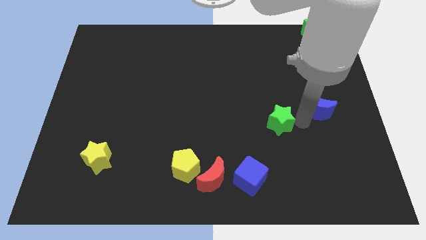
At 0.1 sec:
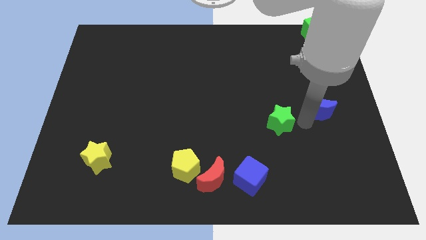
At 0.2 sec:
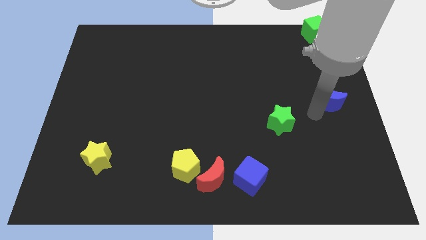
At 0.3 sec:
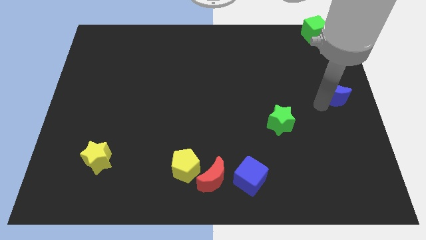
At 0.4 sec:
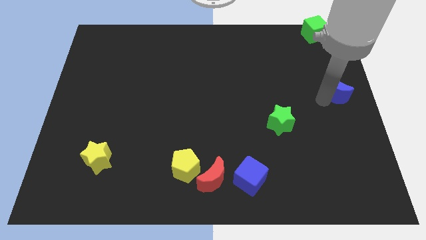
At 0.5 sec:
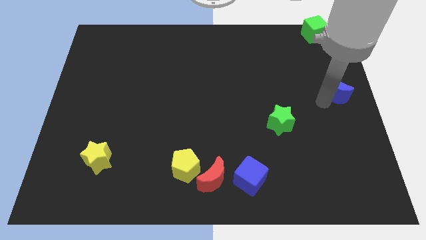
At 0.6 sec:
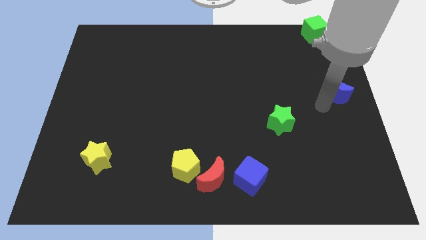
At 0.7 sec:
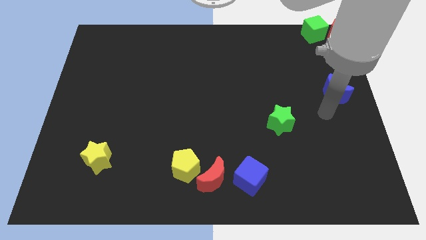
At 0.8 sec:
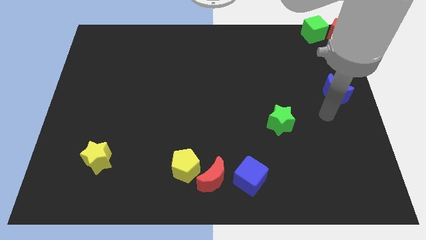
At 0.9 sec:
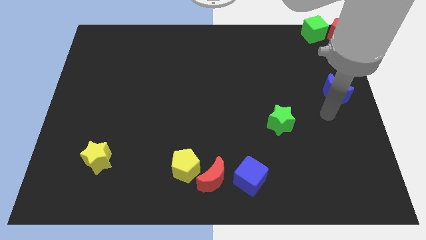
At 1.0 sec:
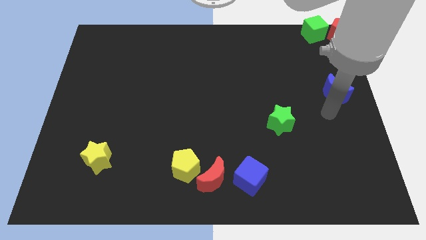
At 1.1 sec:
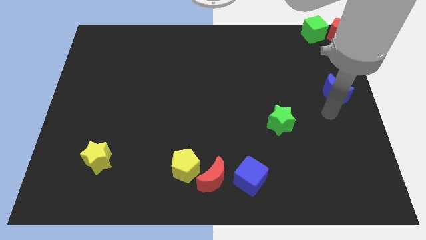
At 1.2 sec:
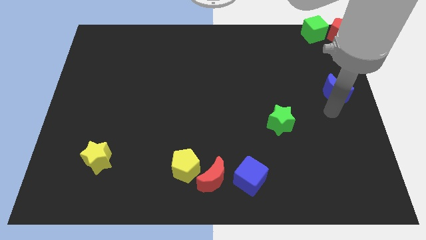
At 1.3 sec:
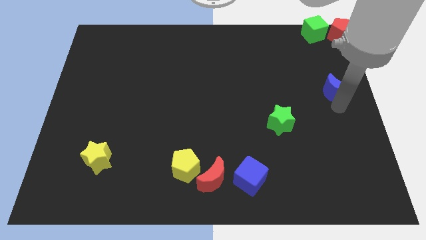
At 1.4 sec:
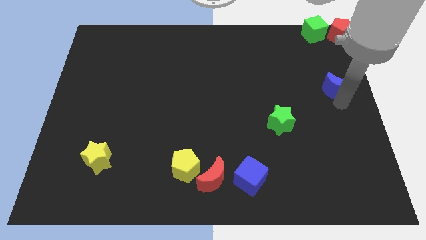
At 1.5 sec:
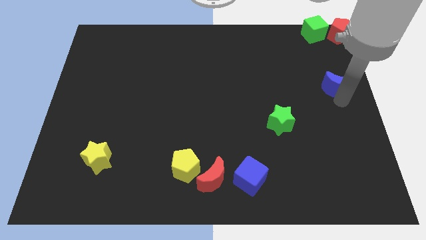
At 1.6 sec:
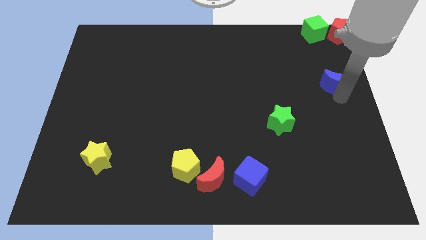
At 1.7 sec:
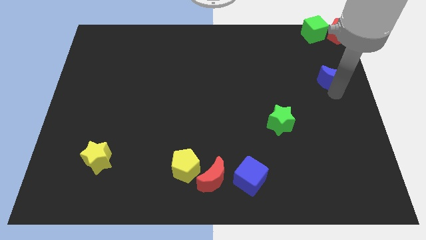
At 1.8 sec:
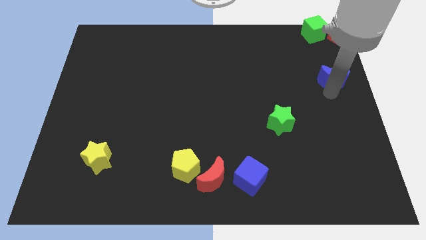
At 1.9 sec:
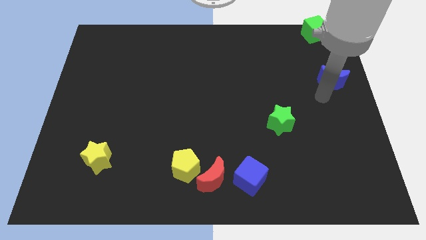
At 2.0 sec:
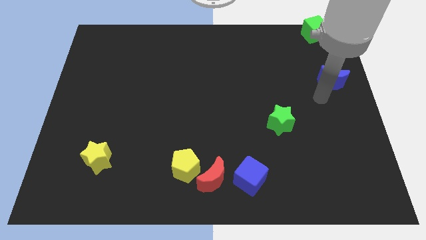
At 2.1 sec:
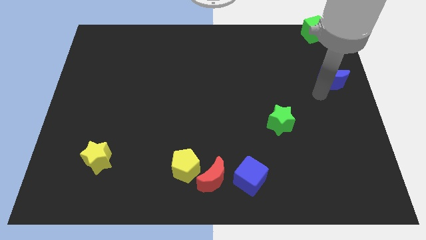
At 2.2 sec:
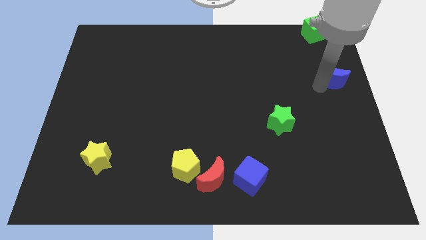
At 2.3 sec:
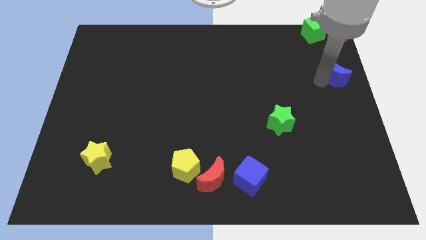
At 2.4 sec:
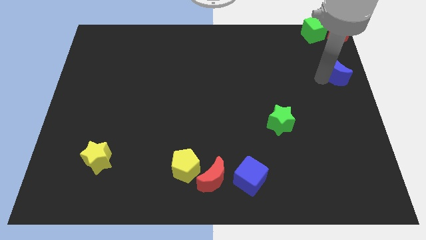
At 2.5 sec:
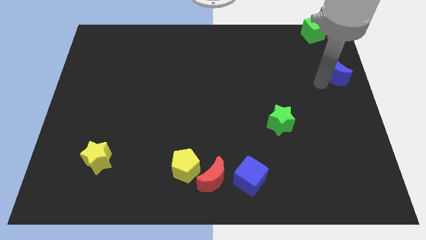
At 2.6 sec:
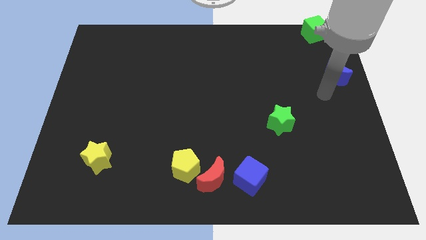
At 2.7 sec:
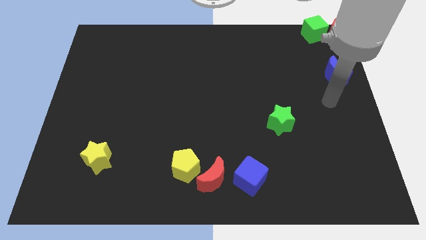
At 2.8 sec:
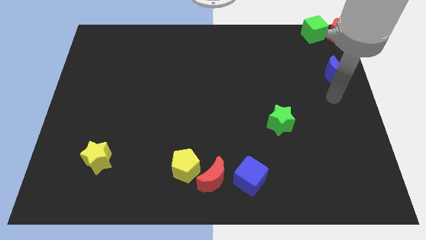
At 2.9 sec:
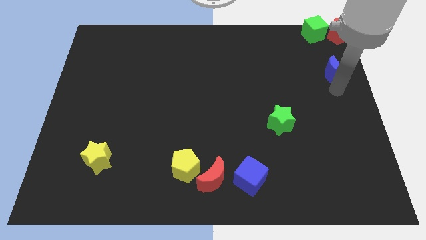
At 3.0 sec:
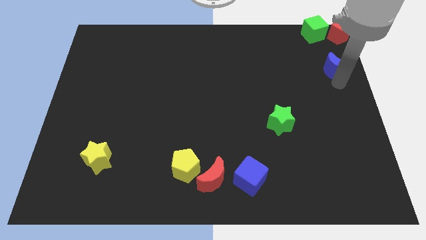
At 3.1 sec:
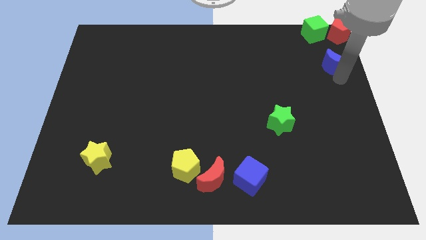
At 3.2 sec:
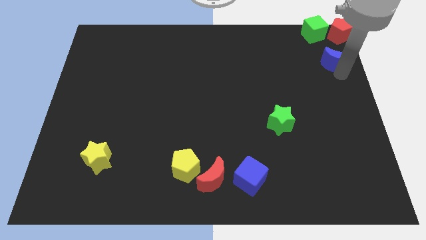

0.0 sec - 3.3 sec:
push the blue moon below the red pentagon

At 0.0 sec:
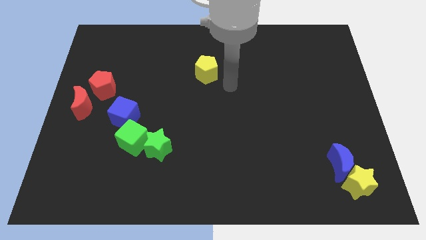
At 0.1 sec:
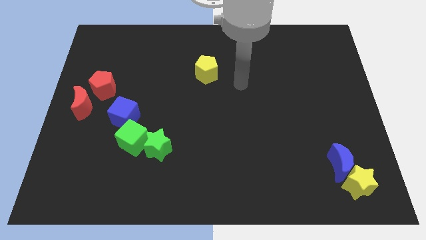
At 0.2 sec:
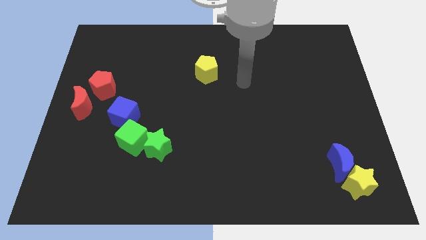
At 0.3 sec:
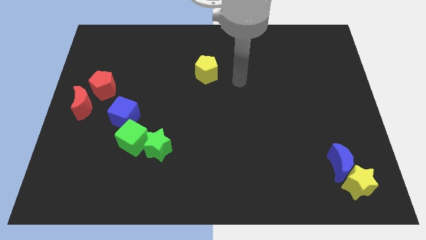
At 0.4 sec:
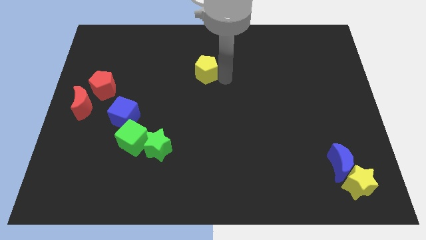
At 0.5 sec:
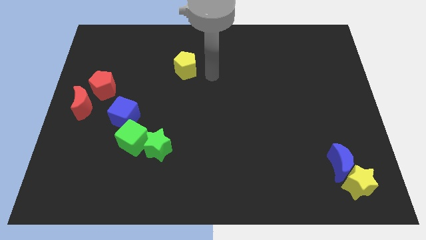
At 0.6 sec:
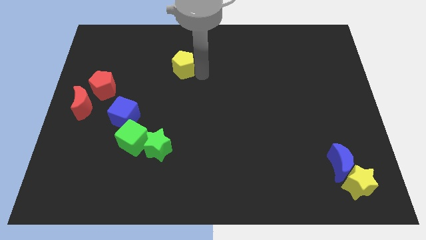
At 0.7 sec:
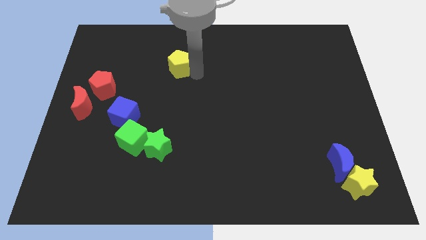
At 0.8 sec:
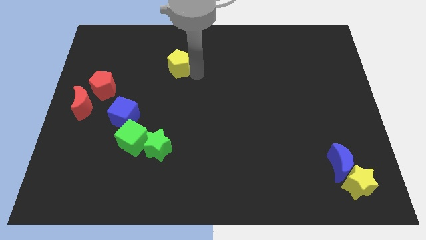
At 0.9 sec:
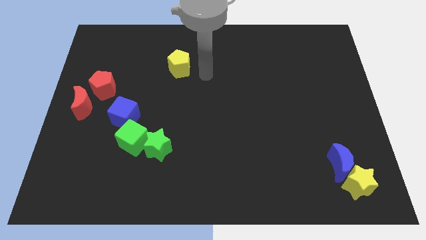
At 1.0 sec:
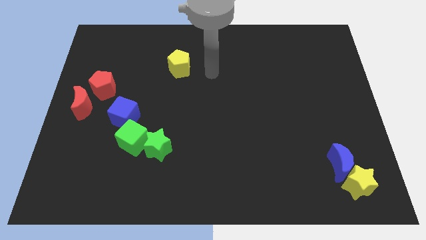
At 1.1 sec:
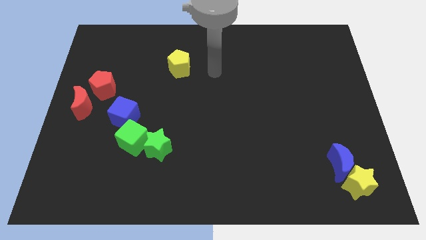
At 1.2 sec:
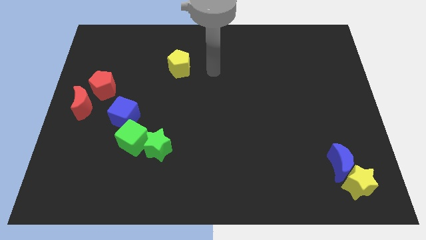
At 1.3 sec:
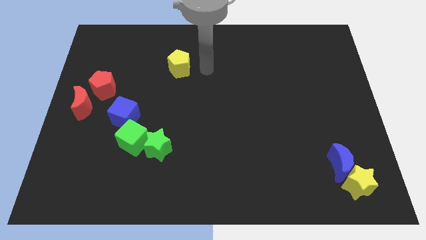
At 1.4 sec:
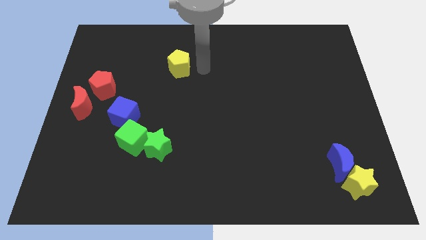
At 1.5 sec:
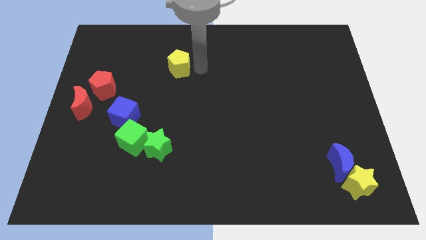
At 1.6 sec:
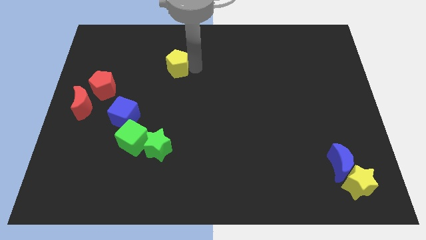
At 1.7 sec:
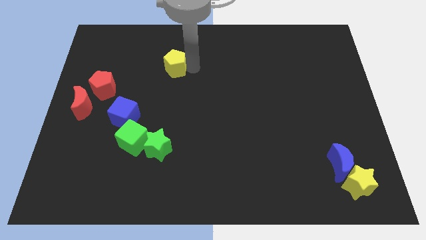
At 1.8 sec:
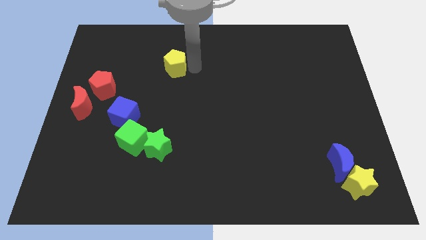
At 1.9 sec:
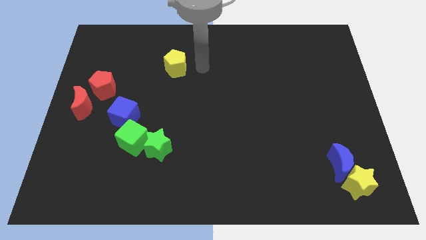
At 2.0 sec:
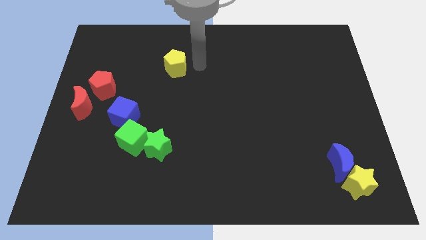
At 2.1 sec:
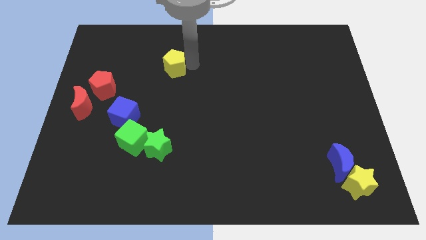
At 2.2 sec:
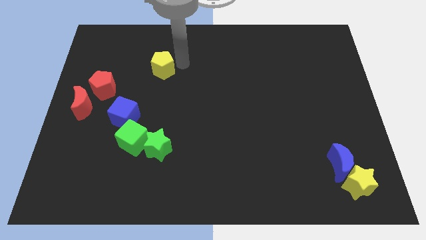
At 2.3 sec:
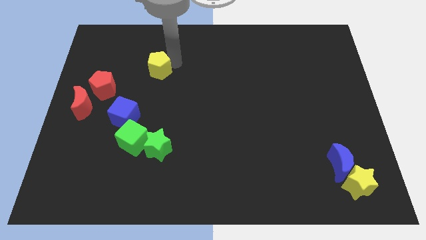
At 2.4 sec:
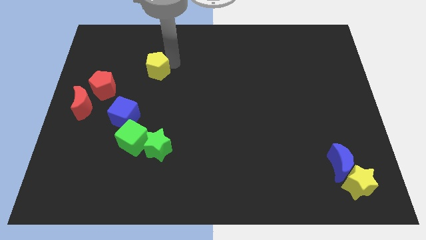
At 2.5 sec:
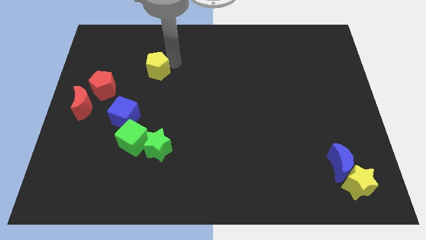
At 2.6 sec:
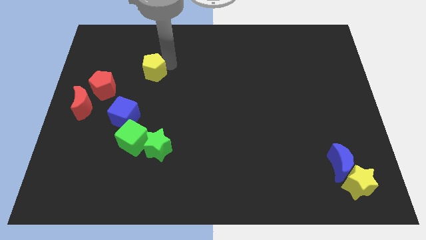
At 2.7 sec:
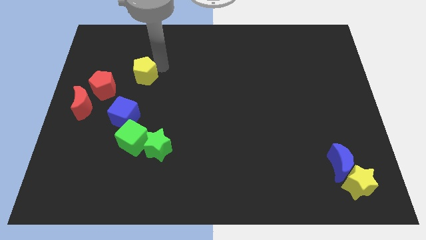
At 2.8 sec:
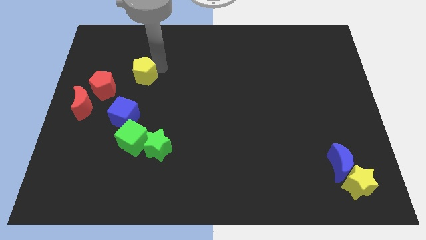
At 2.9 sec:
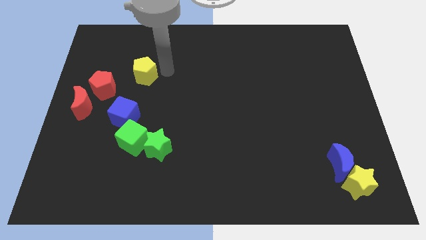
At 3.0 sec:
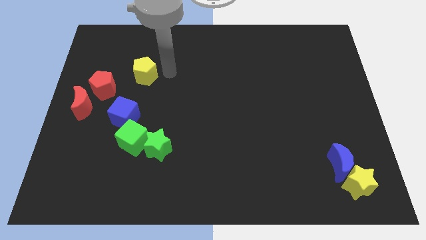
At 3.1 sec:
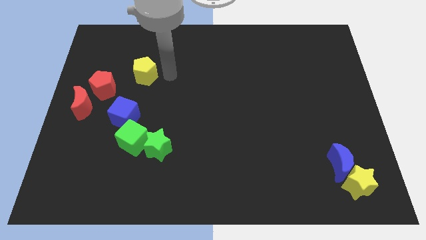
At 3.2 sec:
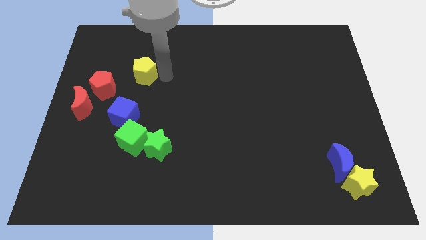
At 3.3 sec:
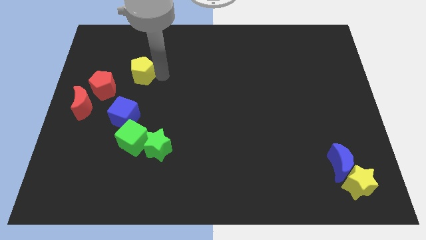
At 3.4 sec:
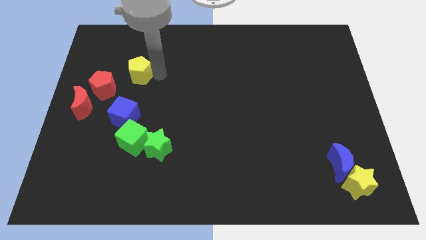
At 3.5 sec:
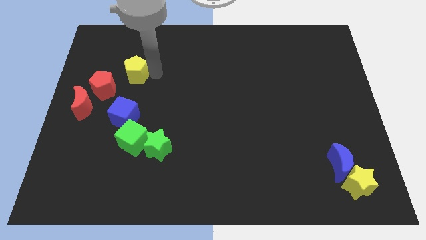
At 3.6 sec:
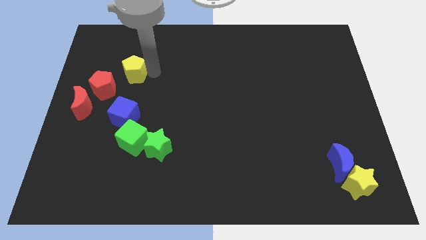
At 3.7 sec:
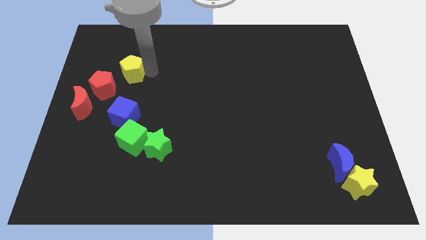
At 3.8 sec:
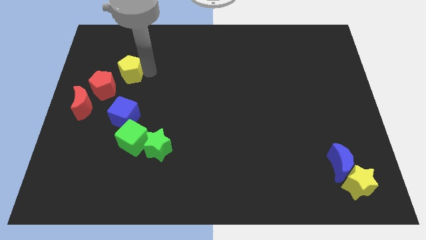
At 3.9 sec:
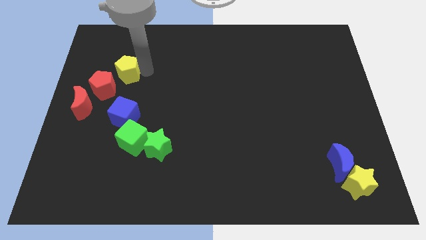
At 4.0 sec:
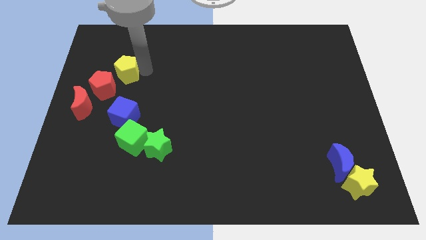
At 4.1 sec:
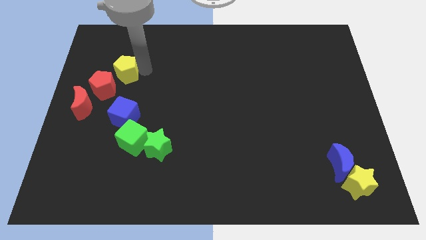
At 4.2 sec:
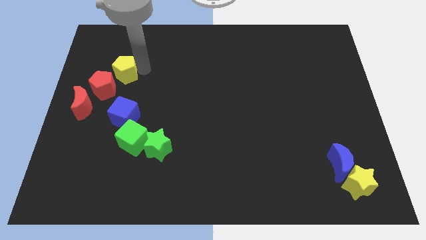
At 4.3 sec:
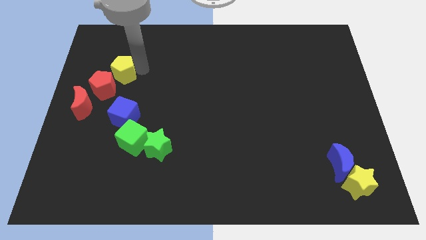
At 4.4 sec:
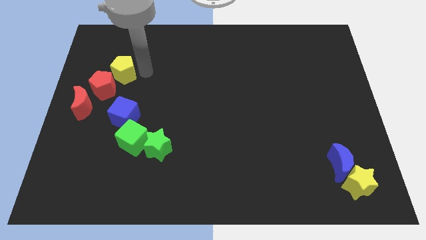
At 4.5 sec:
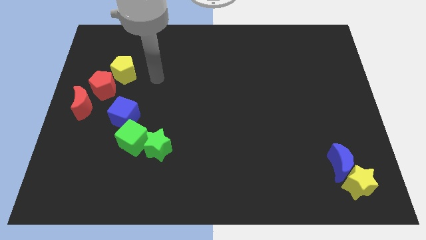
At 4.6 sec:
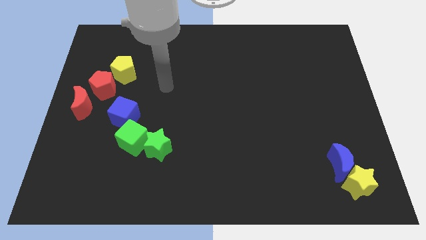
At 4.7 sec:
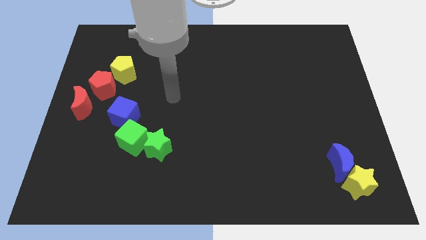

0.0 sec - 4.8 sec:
push the yellow pentagon to the top side of the red pentagon

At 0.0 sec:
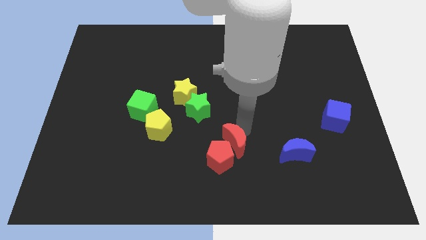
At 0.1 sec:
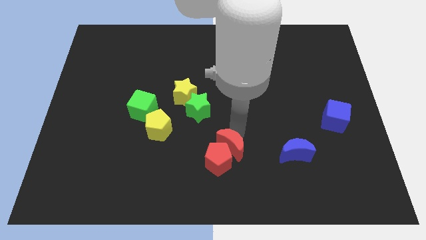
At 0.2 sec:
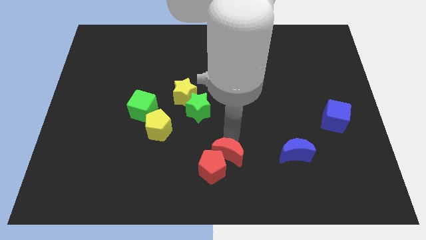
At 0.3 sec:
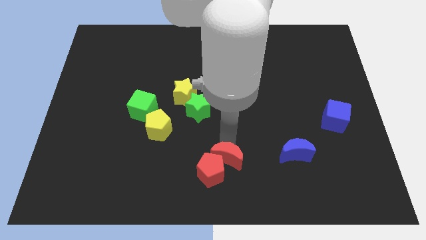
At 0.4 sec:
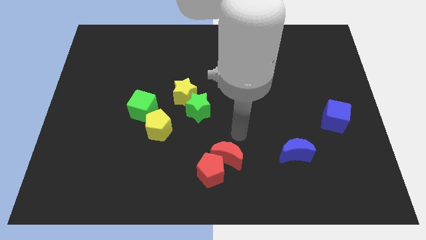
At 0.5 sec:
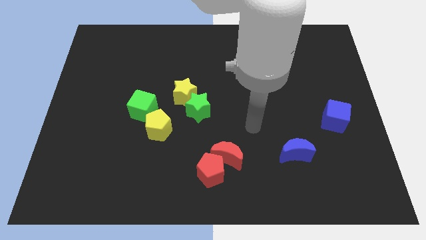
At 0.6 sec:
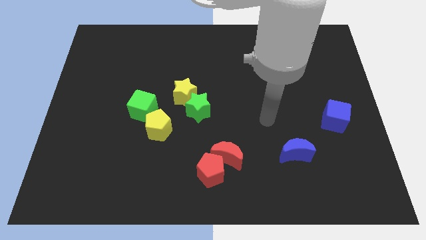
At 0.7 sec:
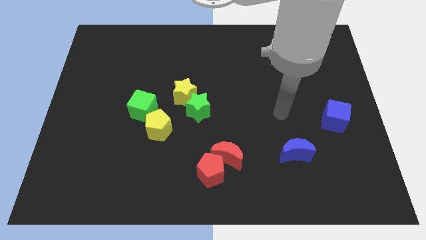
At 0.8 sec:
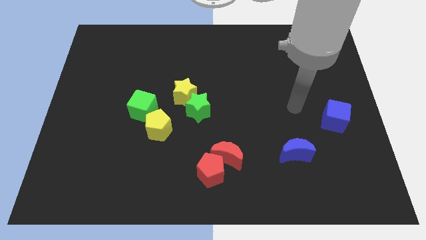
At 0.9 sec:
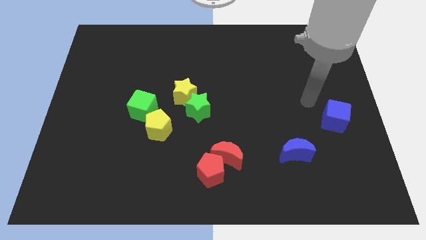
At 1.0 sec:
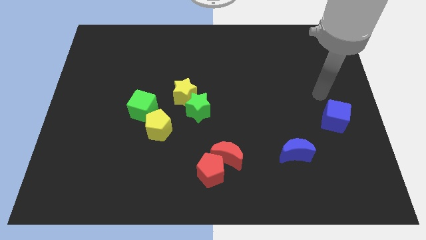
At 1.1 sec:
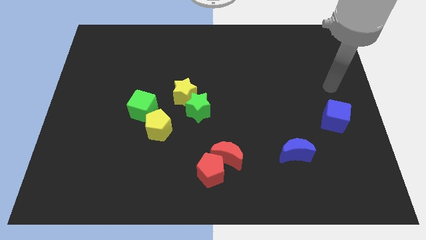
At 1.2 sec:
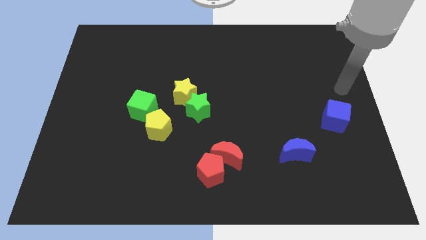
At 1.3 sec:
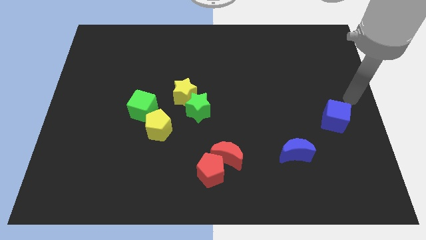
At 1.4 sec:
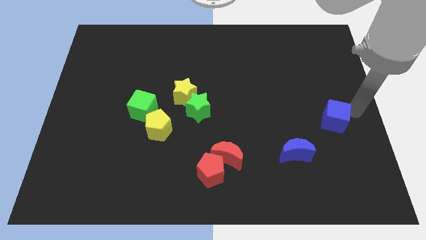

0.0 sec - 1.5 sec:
move your arm to the top of the blue cube
